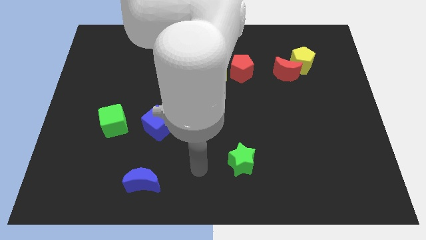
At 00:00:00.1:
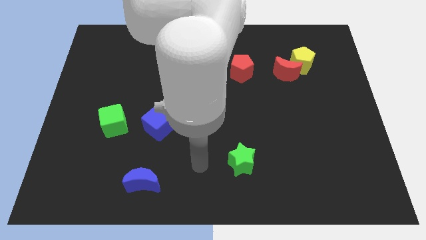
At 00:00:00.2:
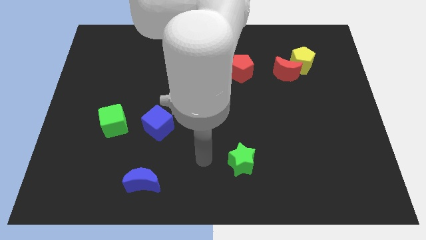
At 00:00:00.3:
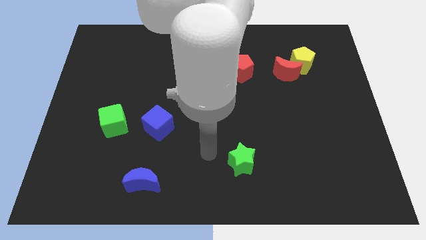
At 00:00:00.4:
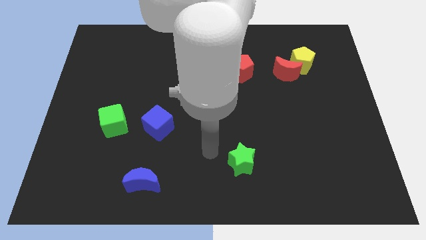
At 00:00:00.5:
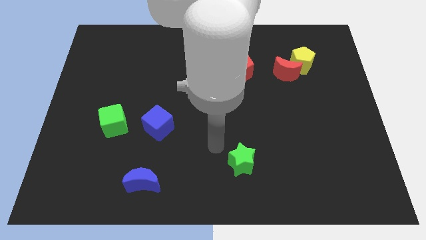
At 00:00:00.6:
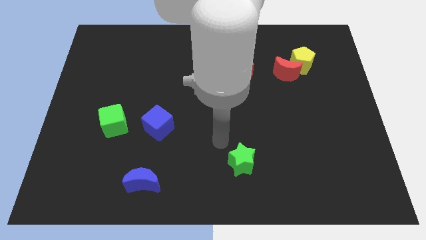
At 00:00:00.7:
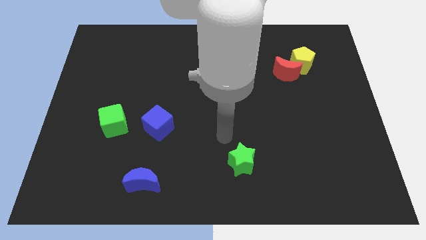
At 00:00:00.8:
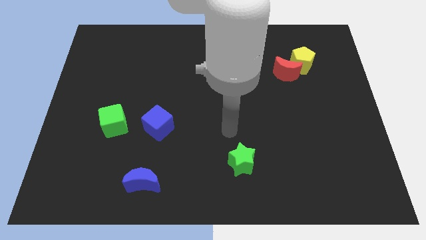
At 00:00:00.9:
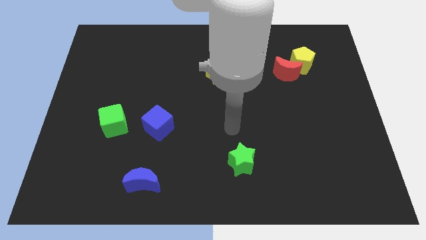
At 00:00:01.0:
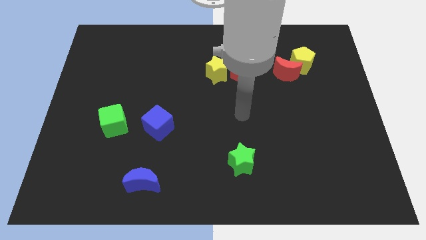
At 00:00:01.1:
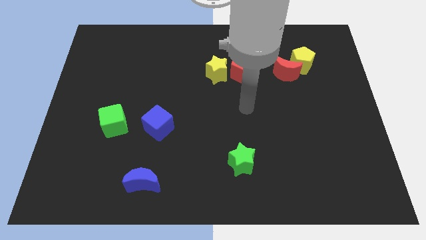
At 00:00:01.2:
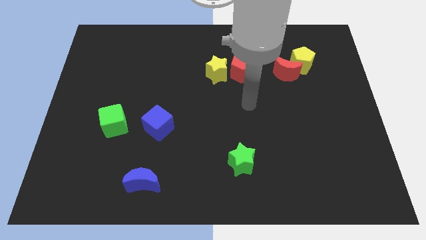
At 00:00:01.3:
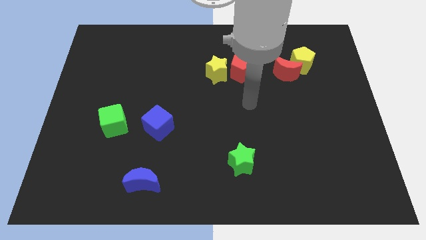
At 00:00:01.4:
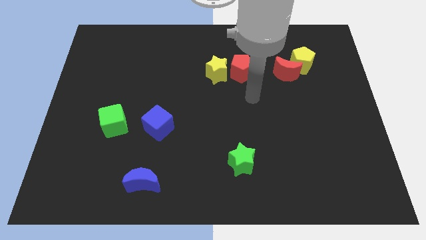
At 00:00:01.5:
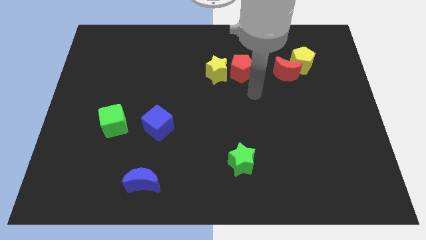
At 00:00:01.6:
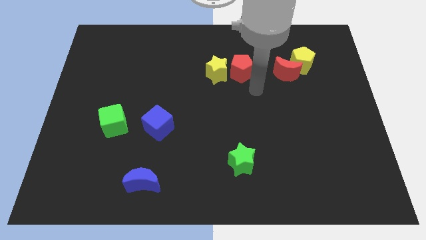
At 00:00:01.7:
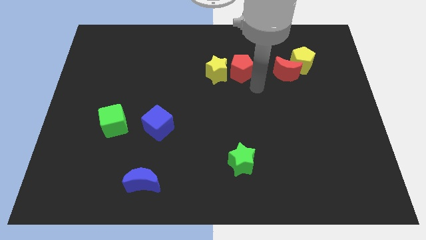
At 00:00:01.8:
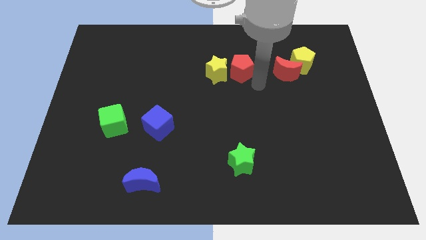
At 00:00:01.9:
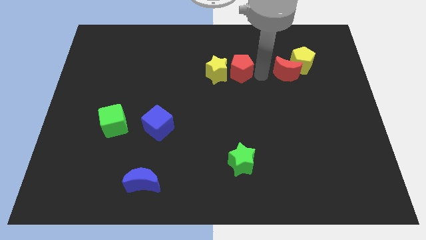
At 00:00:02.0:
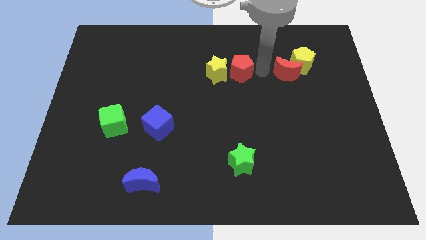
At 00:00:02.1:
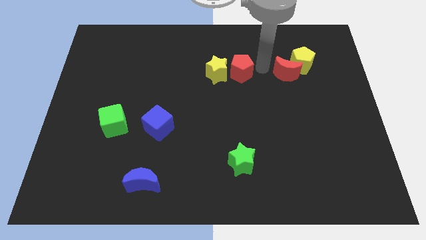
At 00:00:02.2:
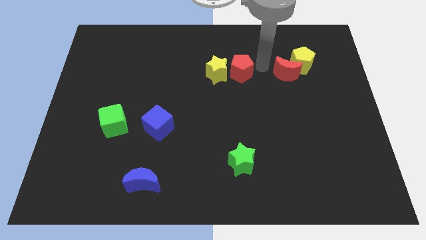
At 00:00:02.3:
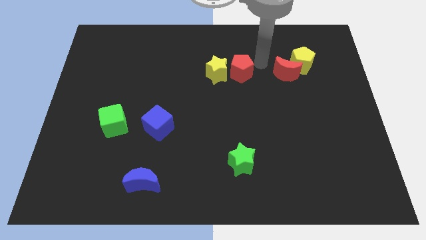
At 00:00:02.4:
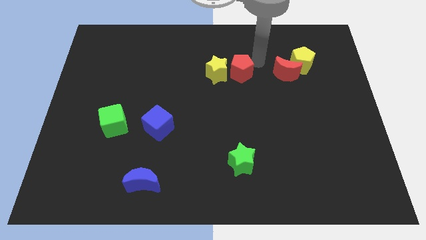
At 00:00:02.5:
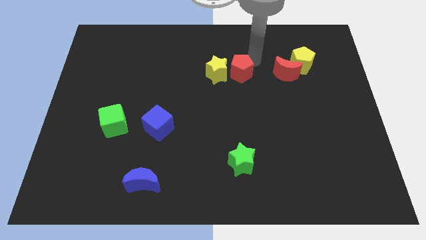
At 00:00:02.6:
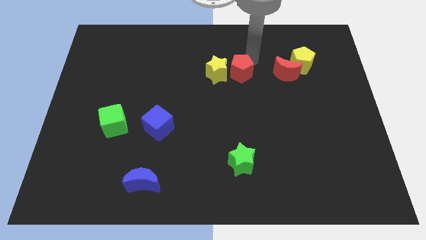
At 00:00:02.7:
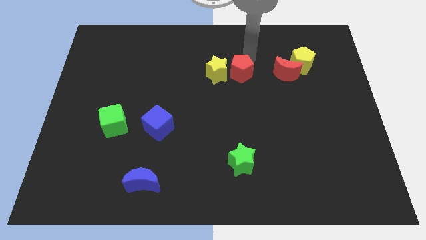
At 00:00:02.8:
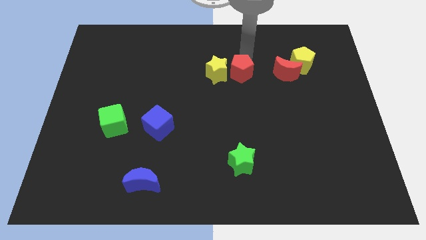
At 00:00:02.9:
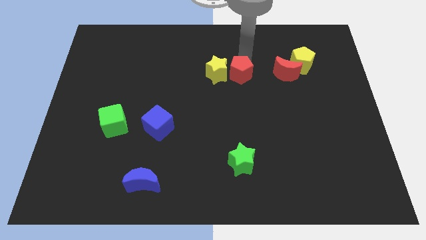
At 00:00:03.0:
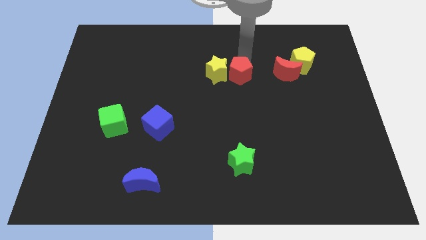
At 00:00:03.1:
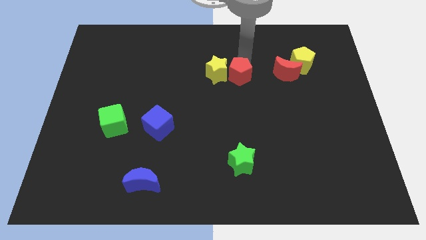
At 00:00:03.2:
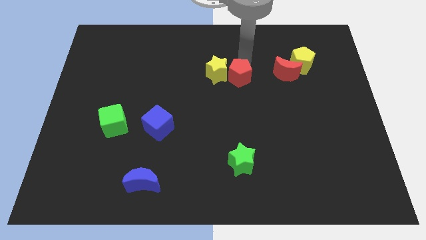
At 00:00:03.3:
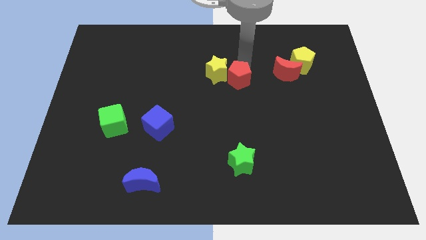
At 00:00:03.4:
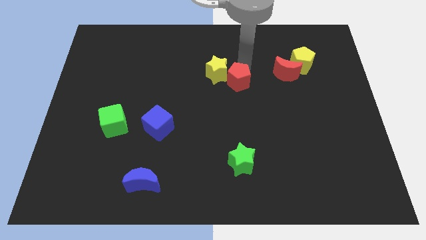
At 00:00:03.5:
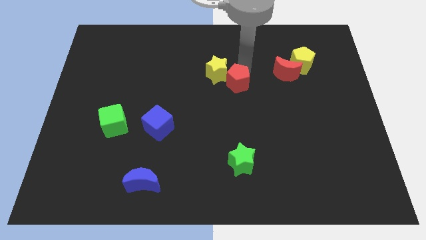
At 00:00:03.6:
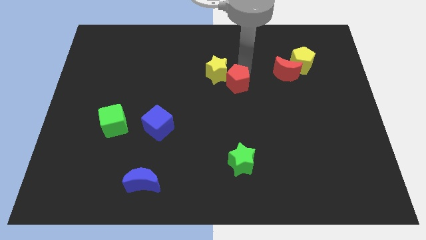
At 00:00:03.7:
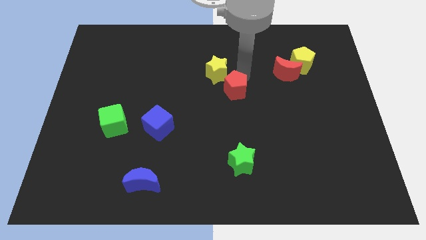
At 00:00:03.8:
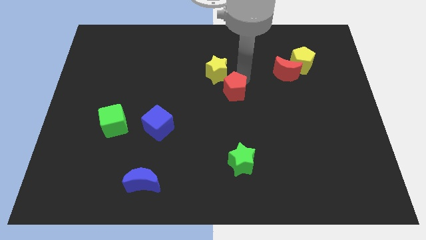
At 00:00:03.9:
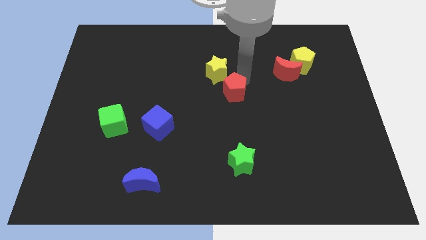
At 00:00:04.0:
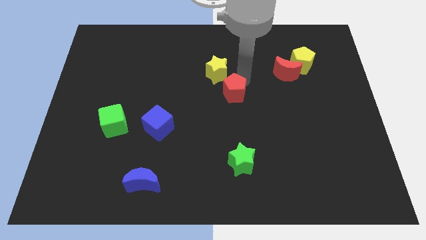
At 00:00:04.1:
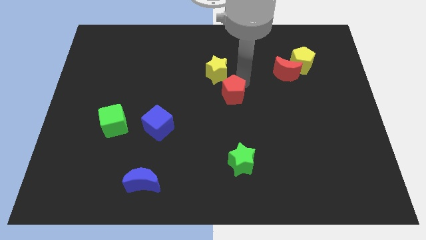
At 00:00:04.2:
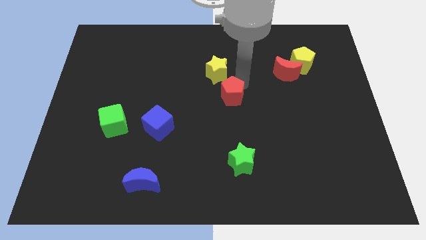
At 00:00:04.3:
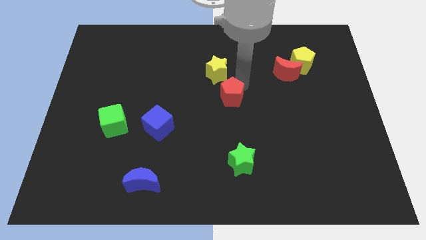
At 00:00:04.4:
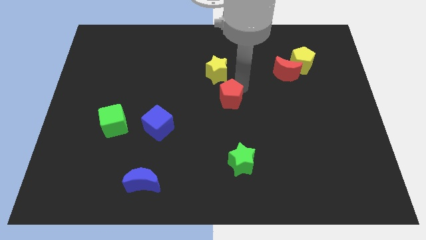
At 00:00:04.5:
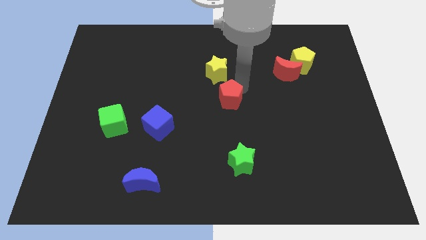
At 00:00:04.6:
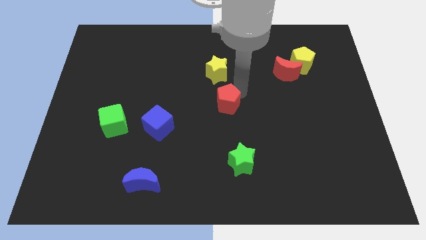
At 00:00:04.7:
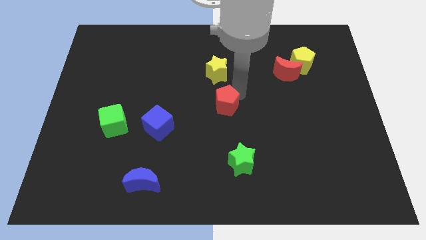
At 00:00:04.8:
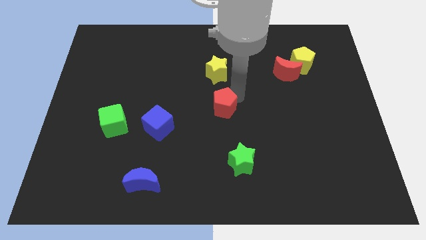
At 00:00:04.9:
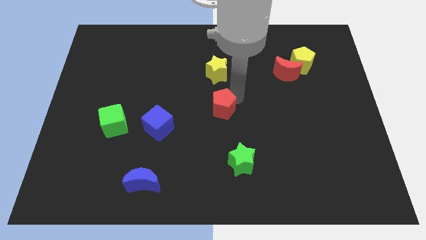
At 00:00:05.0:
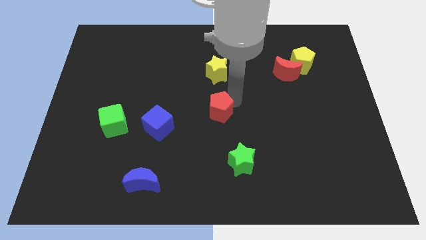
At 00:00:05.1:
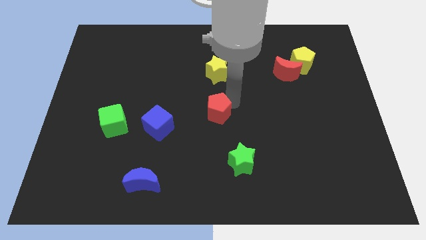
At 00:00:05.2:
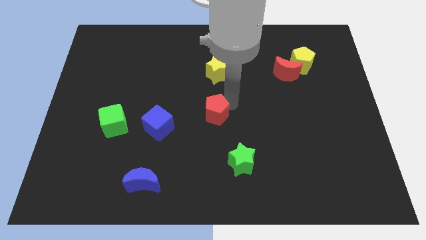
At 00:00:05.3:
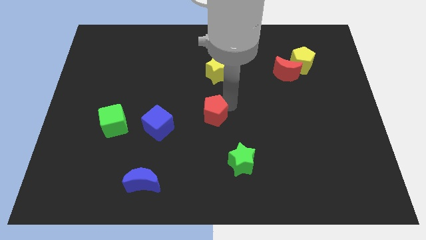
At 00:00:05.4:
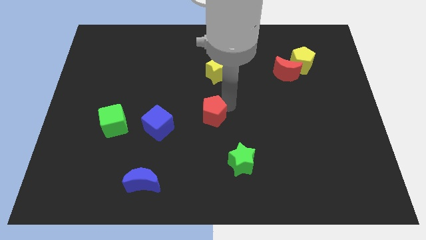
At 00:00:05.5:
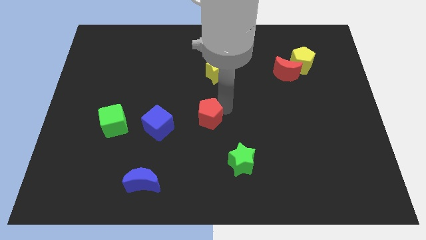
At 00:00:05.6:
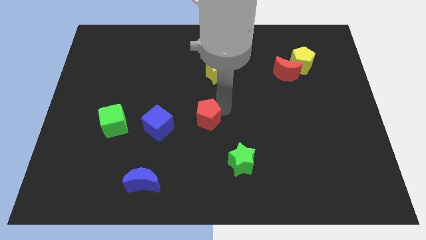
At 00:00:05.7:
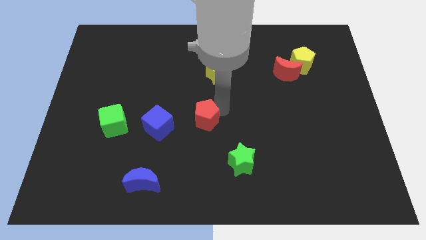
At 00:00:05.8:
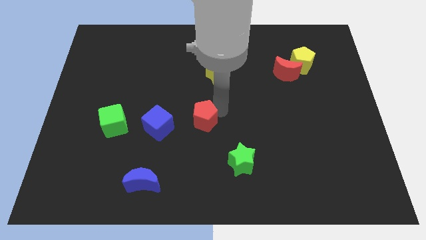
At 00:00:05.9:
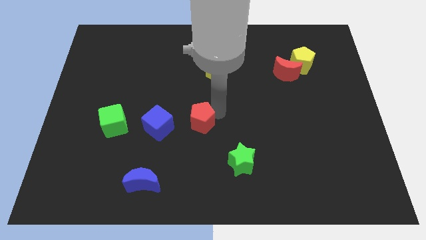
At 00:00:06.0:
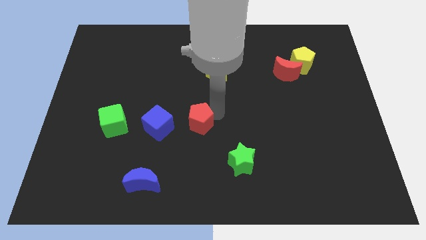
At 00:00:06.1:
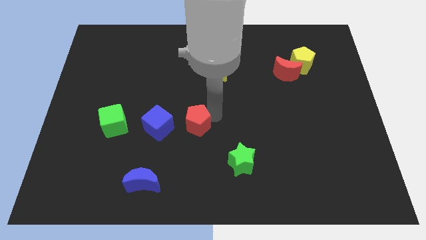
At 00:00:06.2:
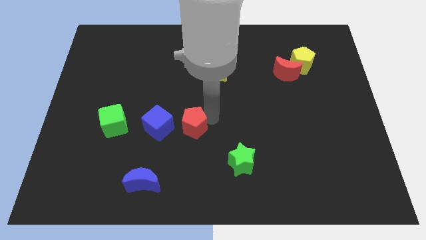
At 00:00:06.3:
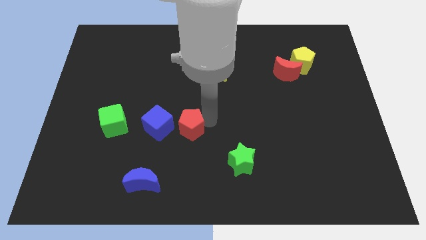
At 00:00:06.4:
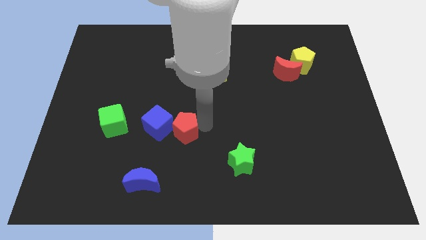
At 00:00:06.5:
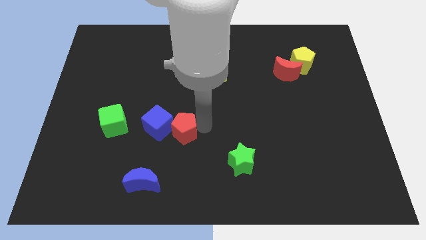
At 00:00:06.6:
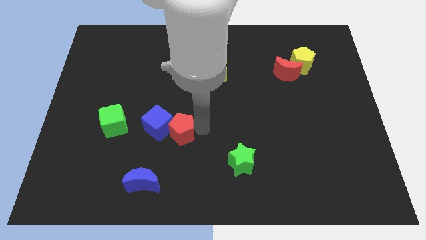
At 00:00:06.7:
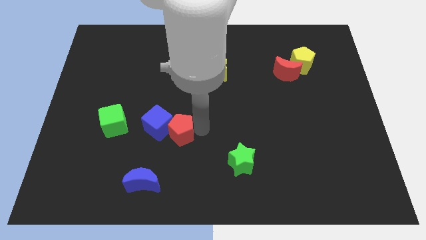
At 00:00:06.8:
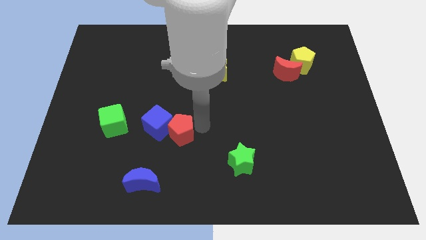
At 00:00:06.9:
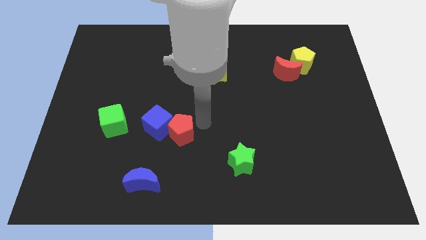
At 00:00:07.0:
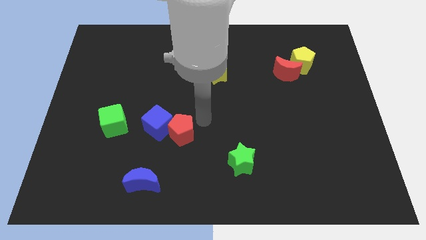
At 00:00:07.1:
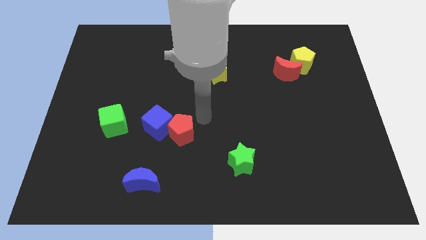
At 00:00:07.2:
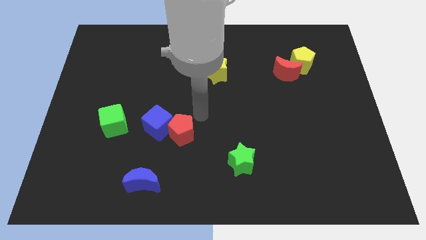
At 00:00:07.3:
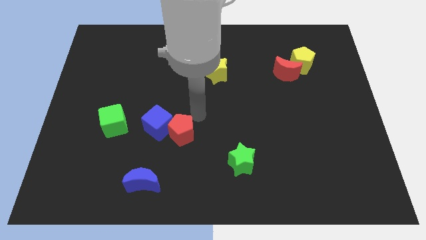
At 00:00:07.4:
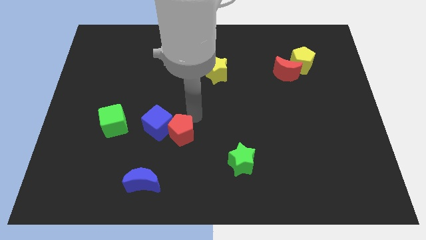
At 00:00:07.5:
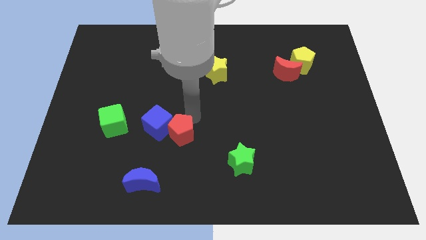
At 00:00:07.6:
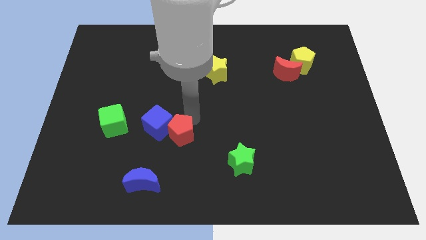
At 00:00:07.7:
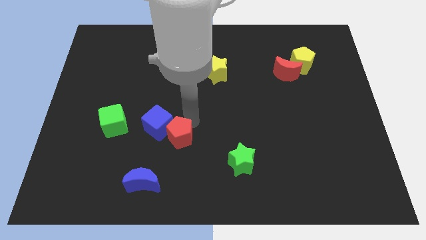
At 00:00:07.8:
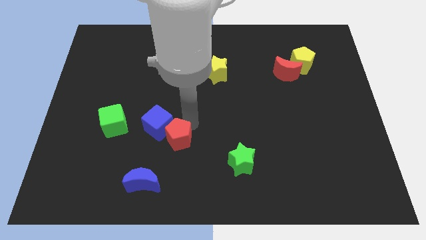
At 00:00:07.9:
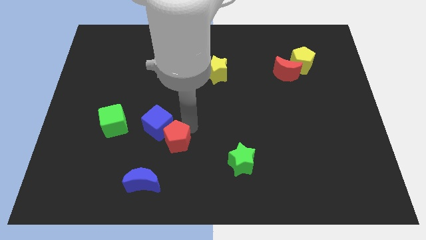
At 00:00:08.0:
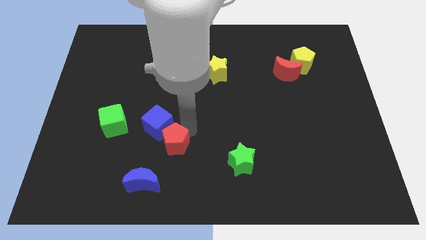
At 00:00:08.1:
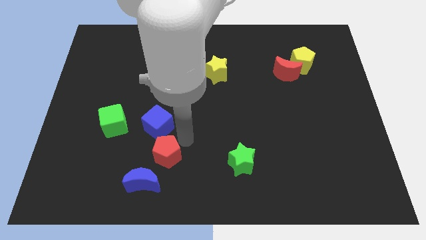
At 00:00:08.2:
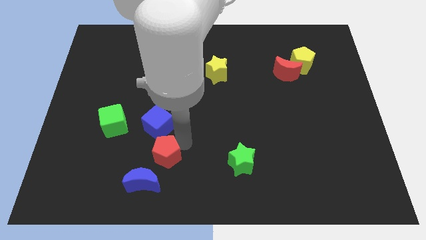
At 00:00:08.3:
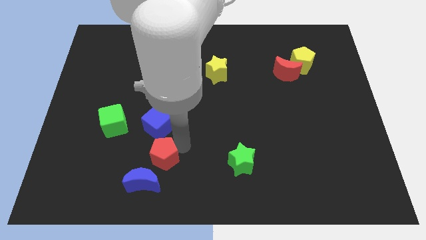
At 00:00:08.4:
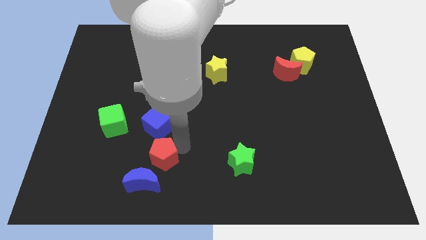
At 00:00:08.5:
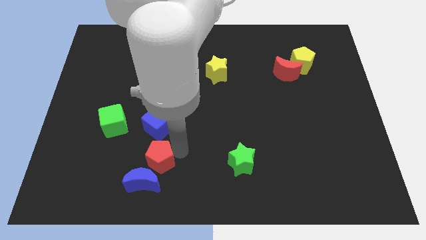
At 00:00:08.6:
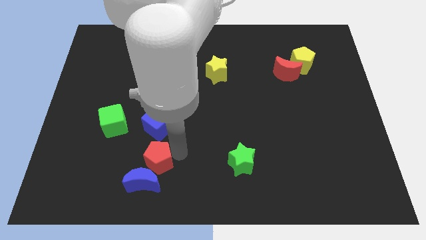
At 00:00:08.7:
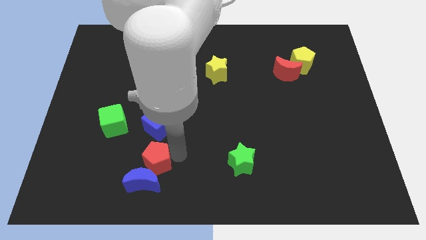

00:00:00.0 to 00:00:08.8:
move the red pentagon towards the blue moon
